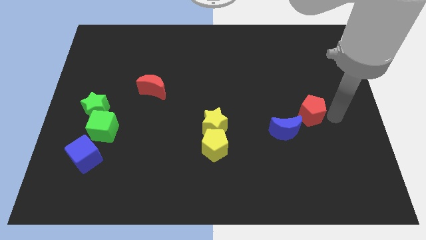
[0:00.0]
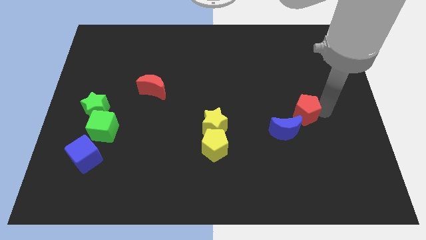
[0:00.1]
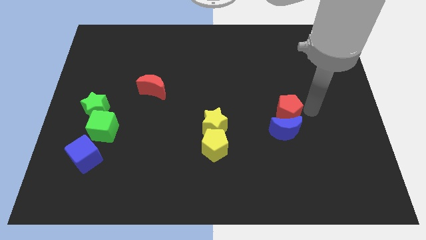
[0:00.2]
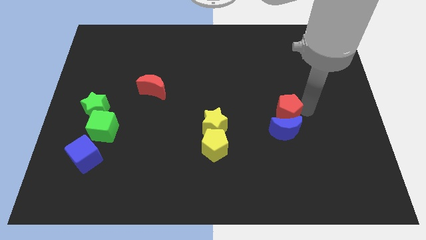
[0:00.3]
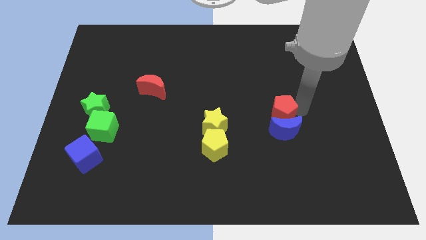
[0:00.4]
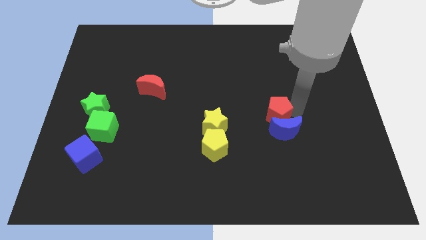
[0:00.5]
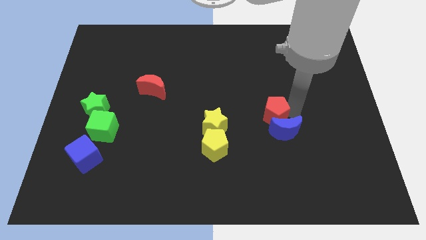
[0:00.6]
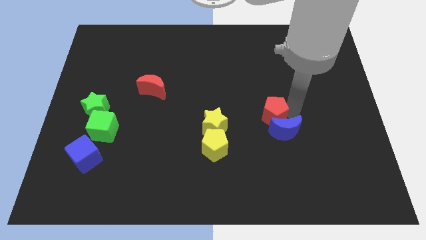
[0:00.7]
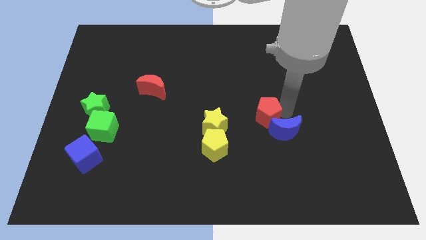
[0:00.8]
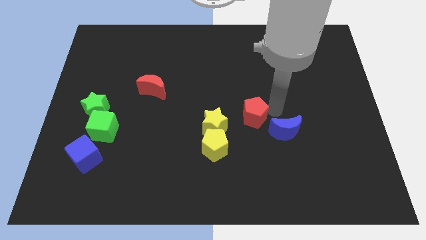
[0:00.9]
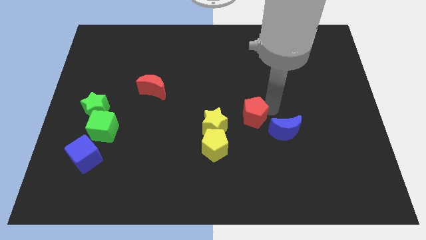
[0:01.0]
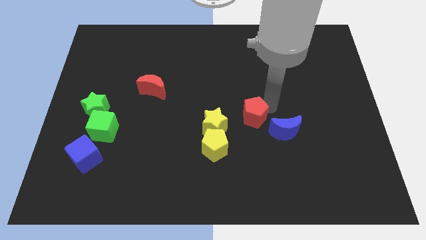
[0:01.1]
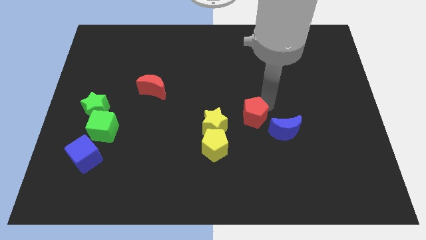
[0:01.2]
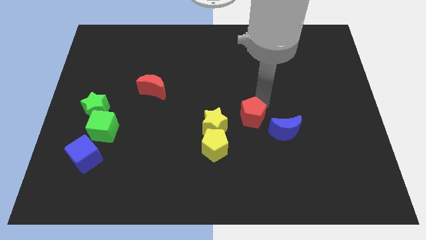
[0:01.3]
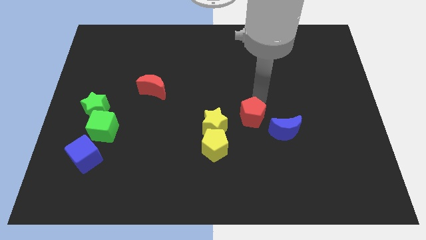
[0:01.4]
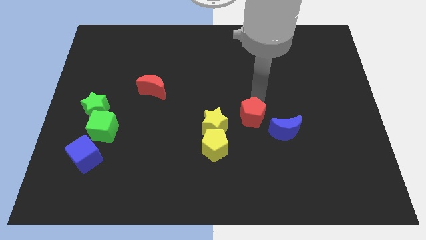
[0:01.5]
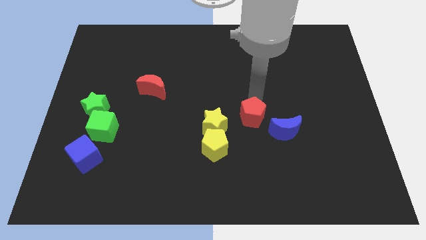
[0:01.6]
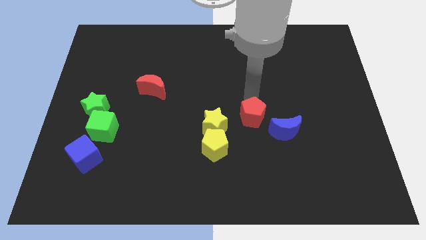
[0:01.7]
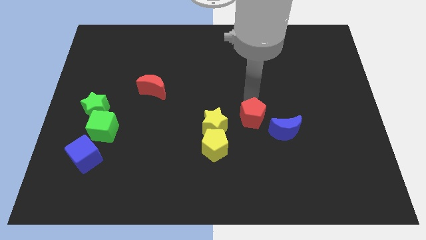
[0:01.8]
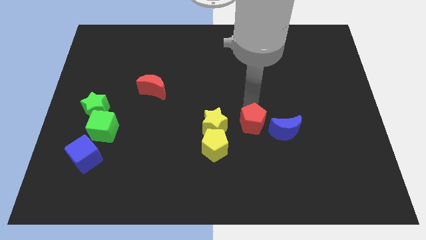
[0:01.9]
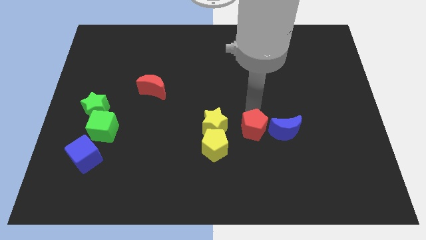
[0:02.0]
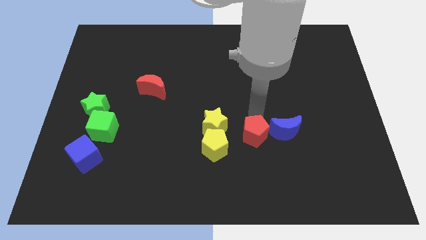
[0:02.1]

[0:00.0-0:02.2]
place red pentagon in between the yellow star and blue moon

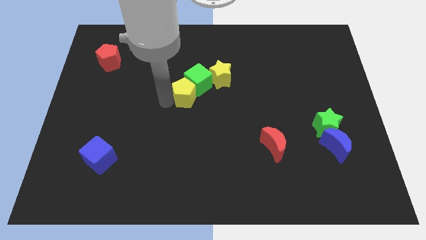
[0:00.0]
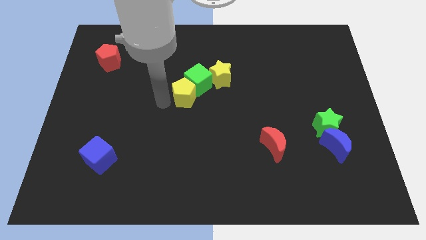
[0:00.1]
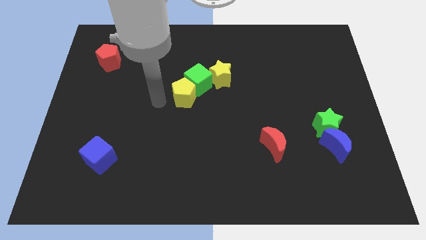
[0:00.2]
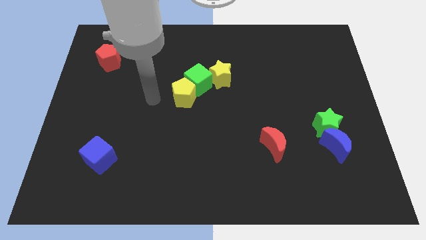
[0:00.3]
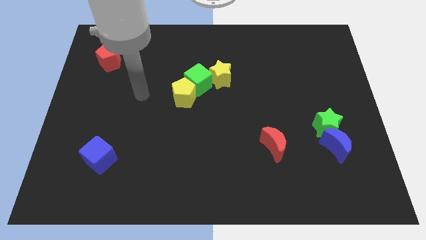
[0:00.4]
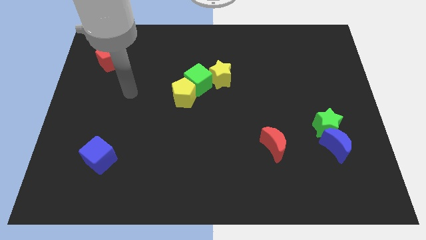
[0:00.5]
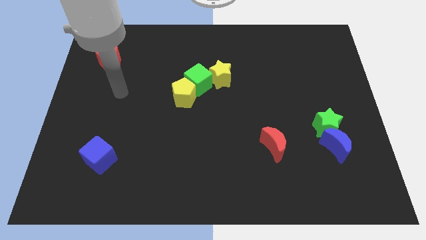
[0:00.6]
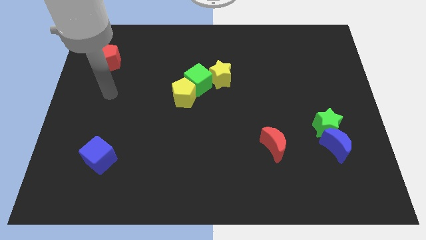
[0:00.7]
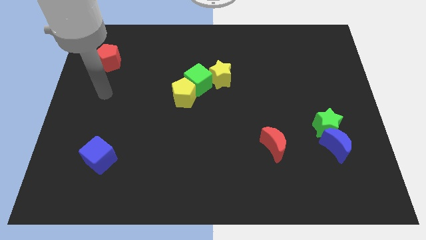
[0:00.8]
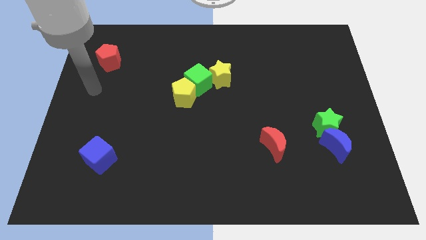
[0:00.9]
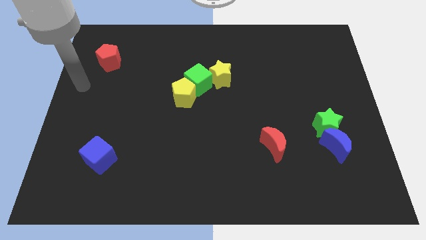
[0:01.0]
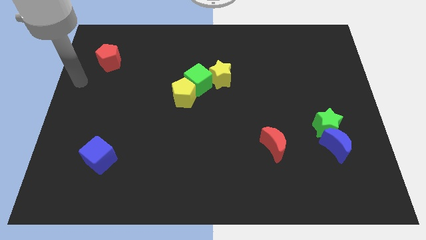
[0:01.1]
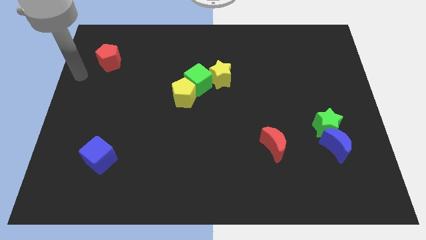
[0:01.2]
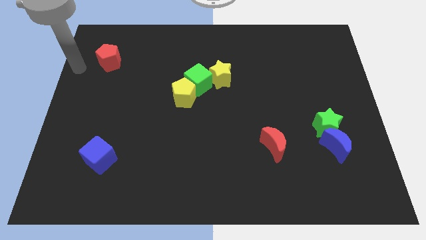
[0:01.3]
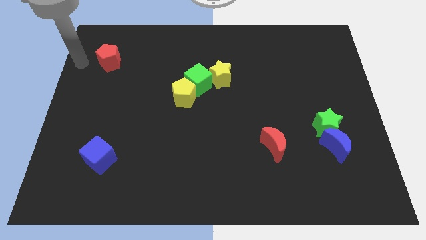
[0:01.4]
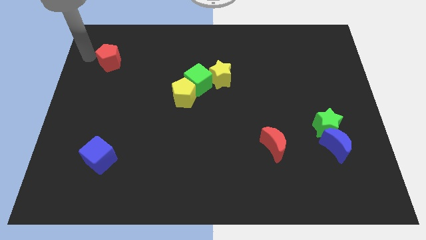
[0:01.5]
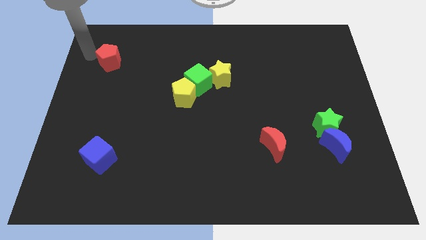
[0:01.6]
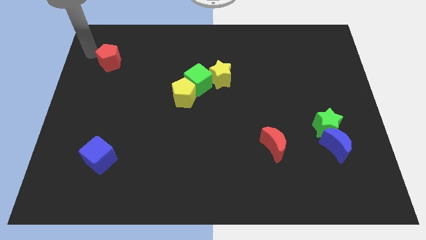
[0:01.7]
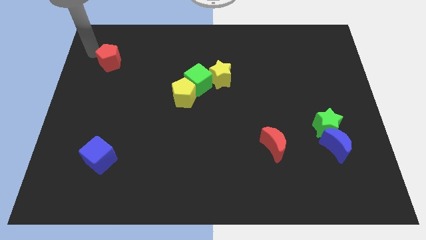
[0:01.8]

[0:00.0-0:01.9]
move your arm towards the red pentagon

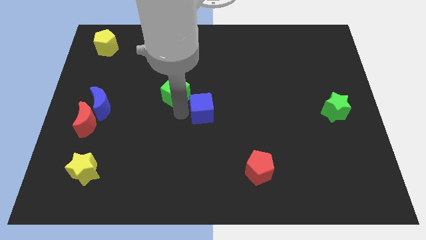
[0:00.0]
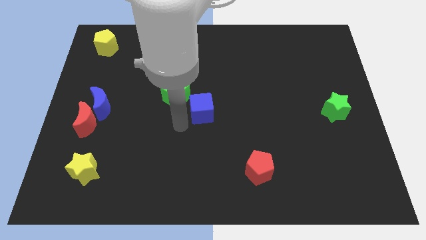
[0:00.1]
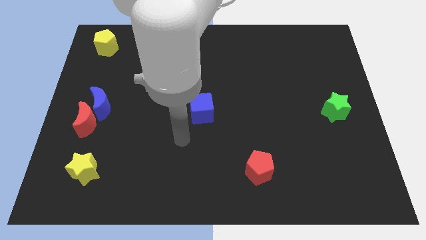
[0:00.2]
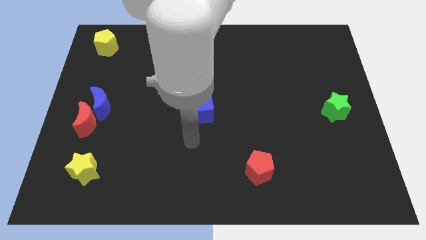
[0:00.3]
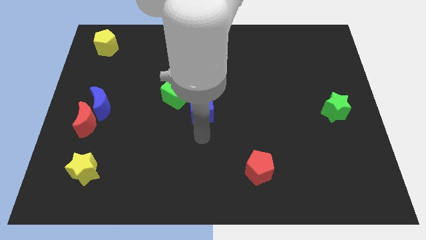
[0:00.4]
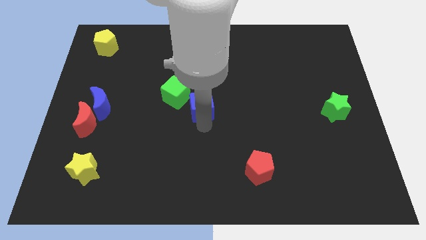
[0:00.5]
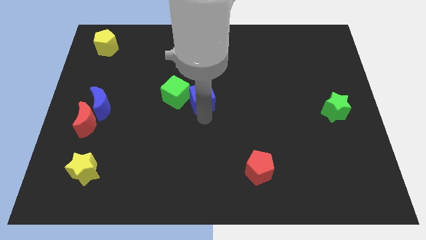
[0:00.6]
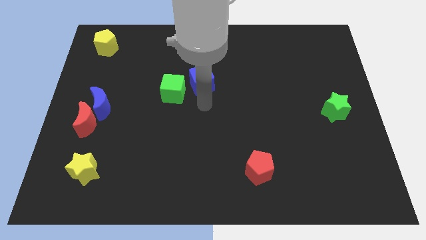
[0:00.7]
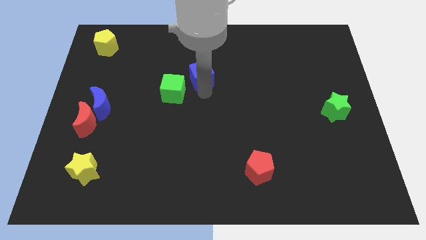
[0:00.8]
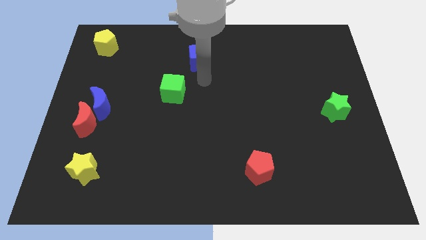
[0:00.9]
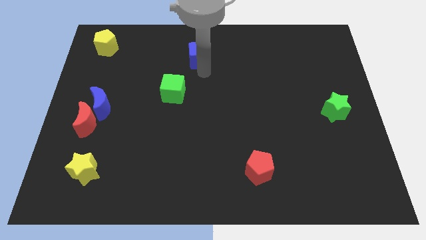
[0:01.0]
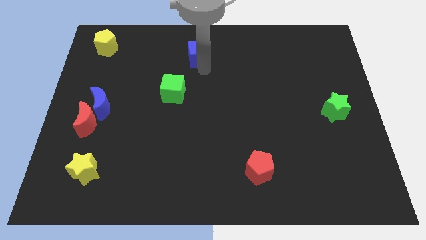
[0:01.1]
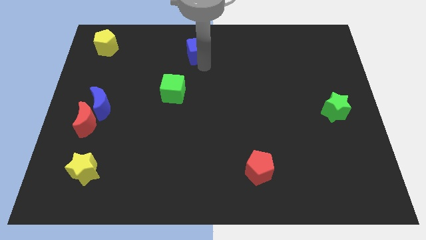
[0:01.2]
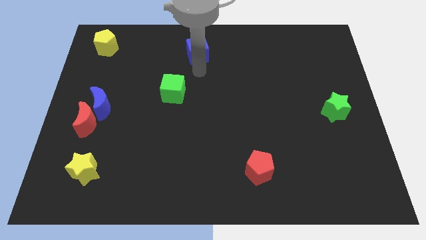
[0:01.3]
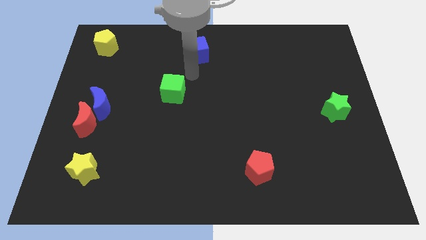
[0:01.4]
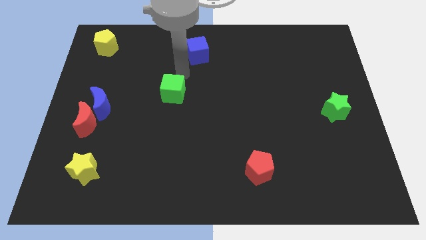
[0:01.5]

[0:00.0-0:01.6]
move the blue cube towards the top center of the board

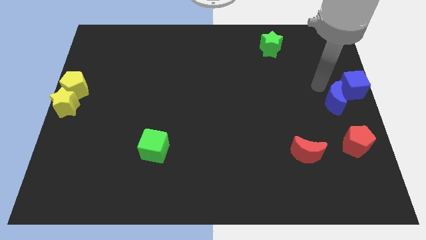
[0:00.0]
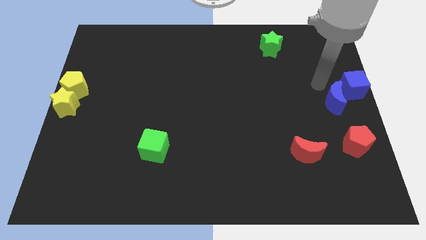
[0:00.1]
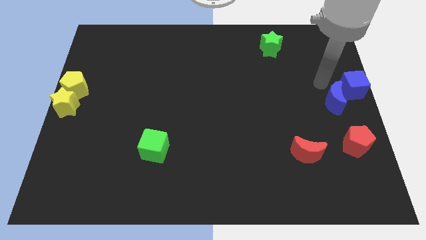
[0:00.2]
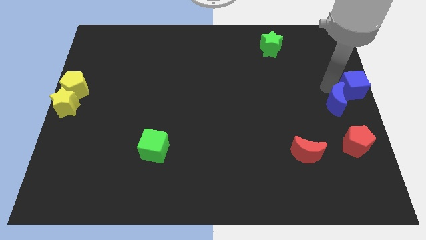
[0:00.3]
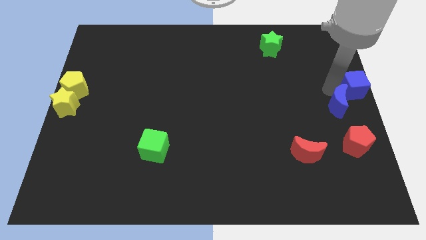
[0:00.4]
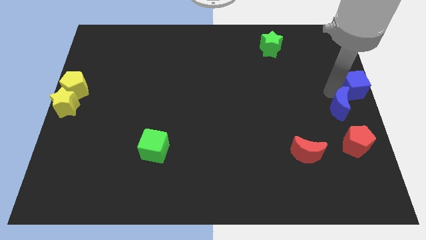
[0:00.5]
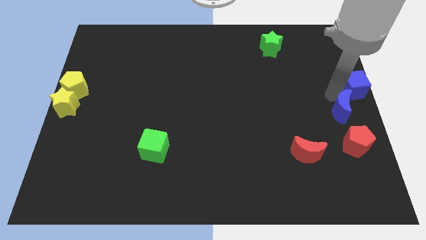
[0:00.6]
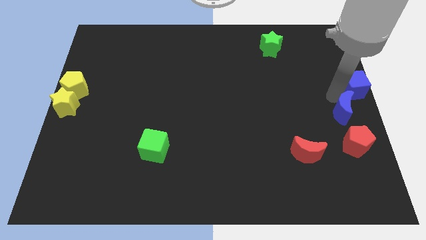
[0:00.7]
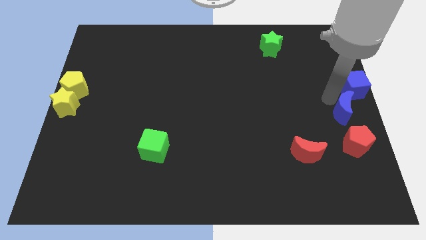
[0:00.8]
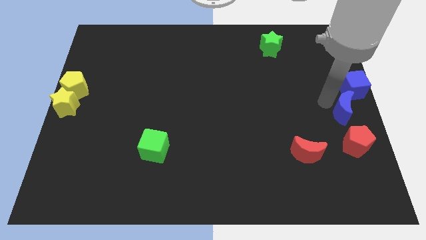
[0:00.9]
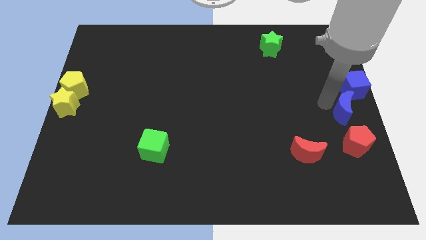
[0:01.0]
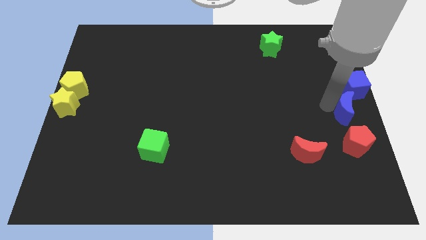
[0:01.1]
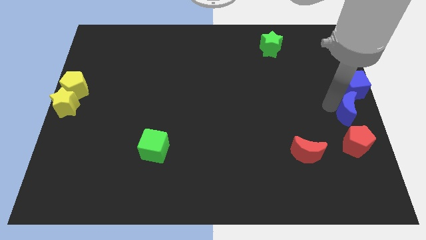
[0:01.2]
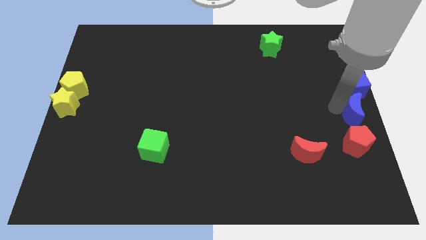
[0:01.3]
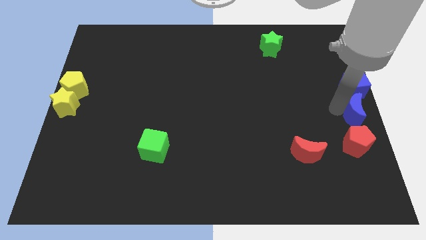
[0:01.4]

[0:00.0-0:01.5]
move the blue crescent to the bottom of the blue cube

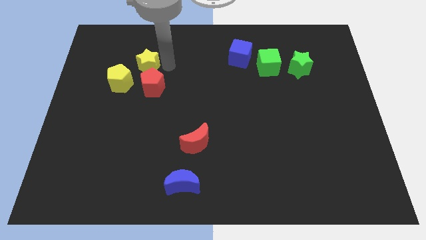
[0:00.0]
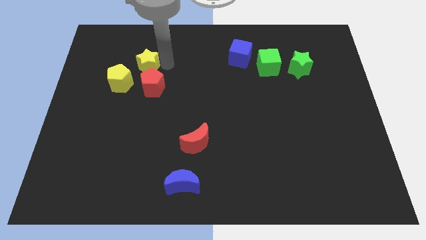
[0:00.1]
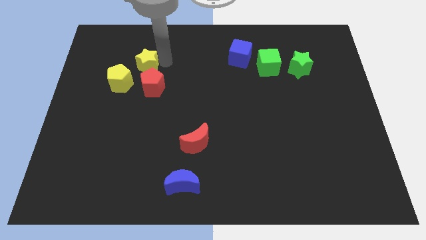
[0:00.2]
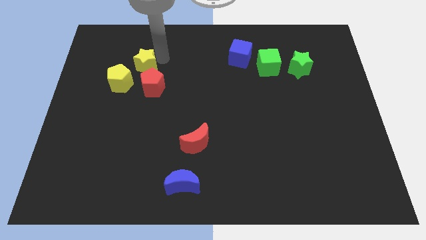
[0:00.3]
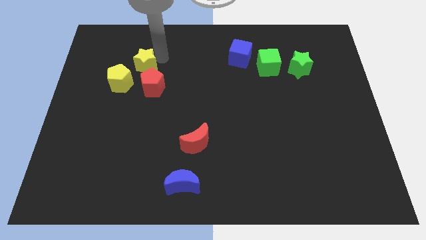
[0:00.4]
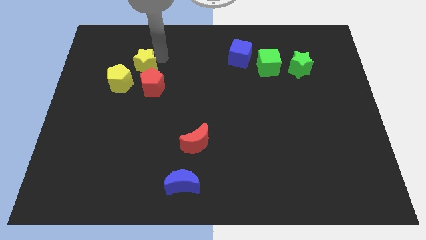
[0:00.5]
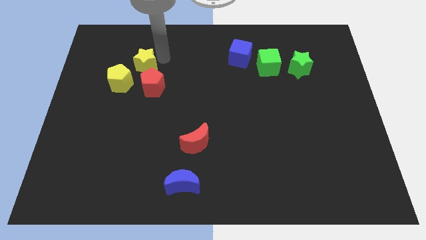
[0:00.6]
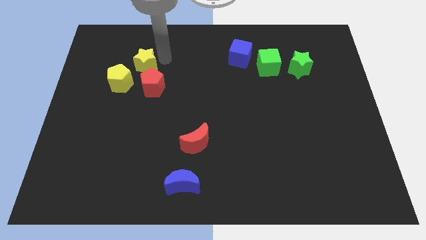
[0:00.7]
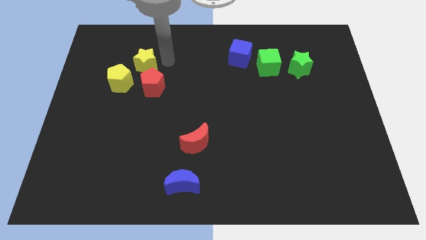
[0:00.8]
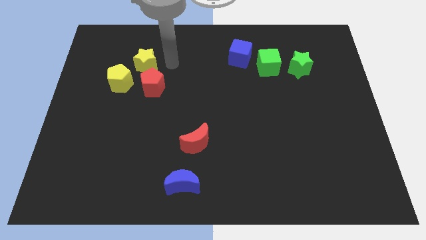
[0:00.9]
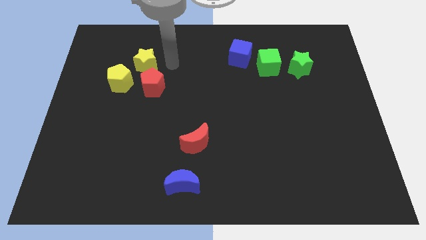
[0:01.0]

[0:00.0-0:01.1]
put the yellow star at the top center of the yellow pentagon and red pentagon

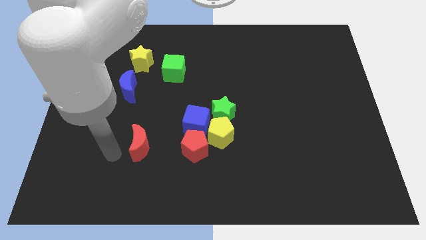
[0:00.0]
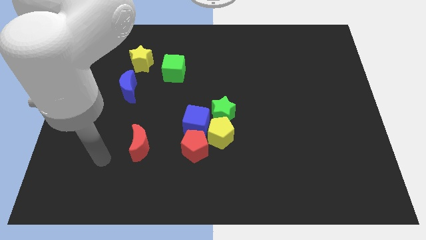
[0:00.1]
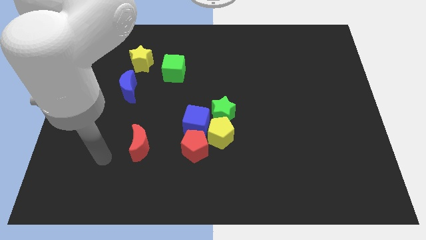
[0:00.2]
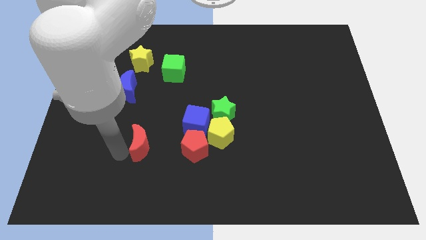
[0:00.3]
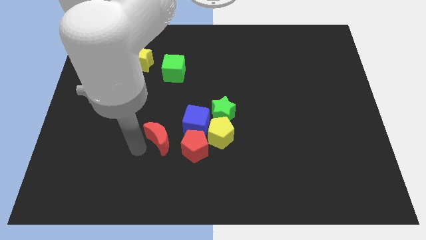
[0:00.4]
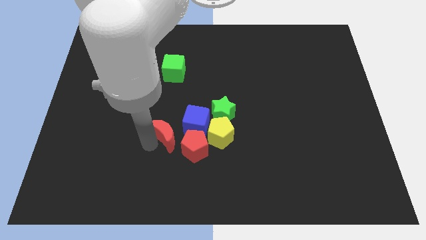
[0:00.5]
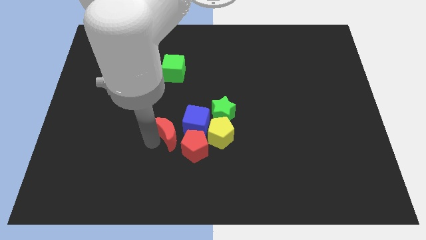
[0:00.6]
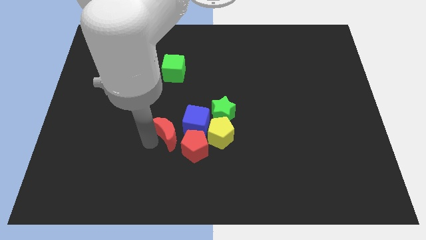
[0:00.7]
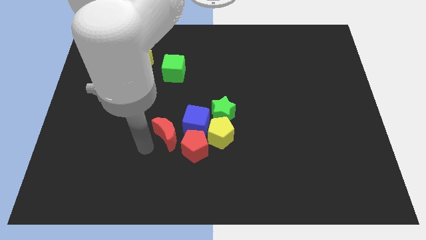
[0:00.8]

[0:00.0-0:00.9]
move the red moon close to the blue cube
